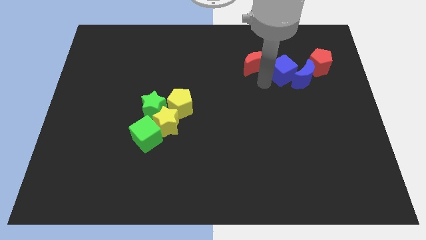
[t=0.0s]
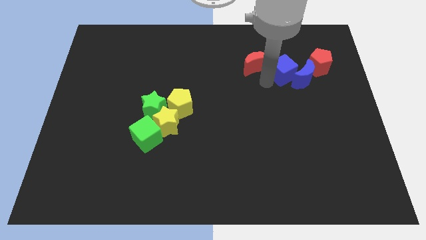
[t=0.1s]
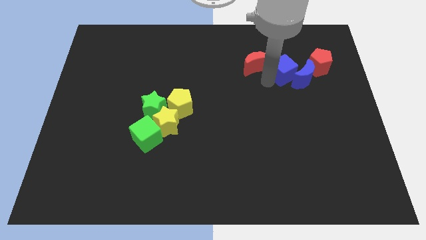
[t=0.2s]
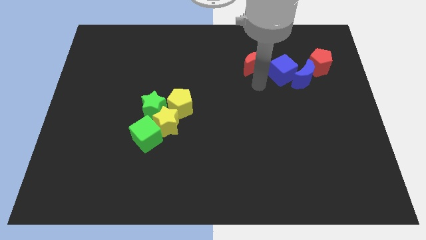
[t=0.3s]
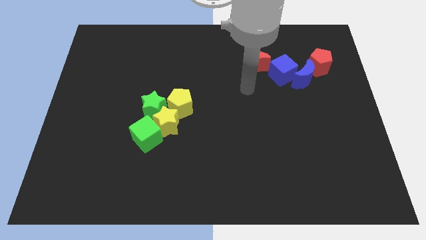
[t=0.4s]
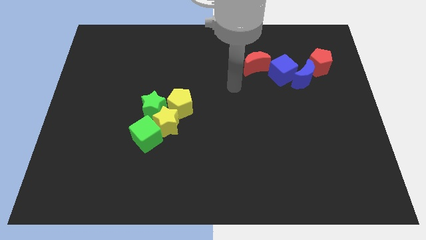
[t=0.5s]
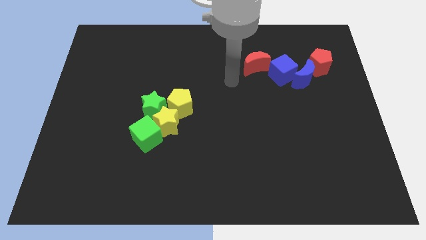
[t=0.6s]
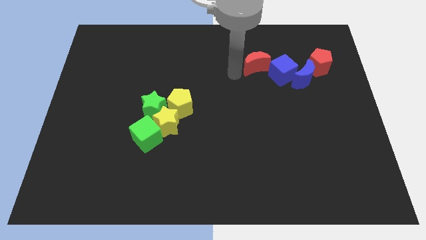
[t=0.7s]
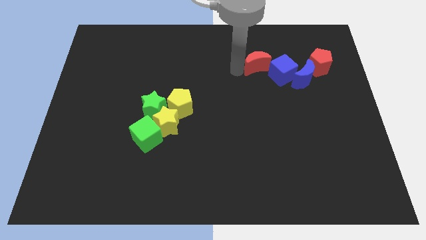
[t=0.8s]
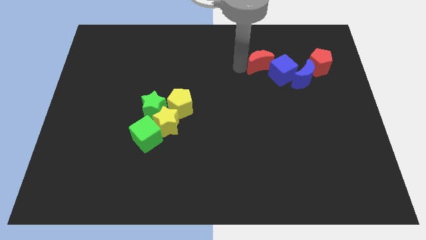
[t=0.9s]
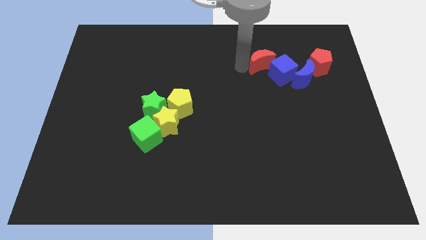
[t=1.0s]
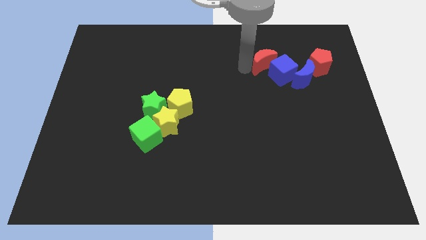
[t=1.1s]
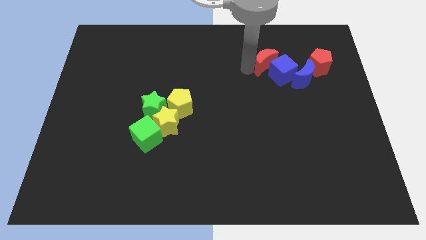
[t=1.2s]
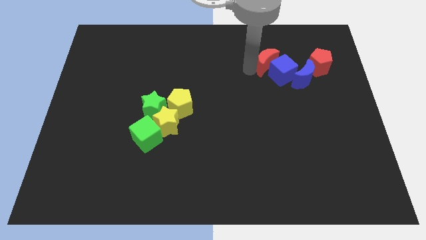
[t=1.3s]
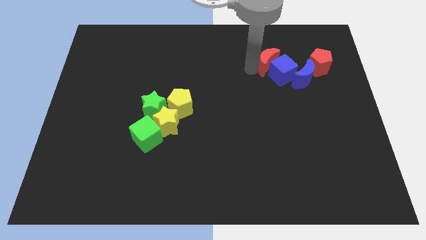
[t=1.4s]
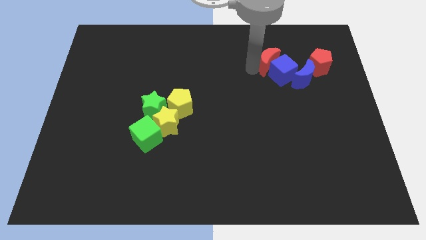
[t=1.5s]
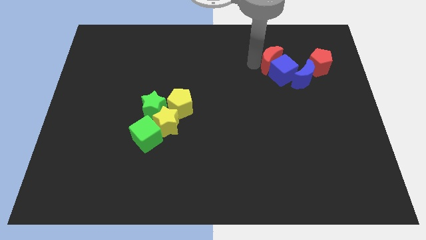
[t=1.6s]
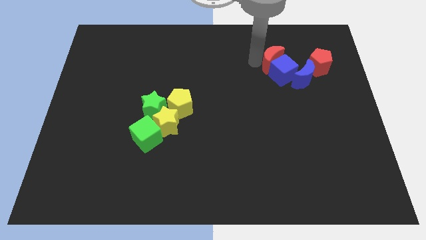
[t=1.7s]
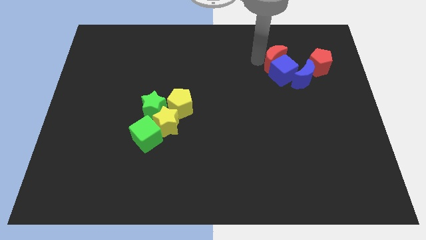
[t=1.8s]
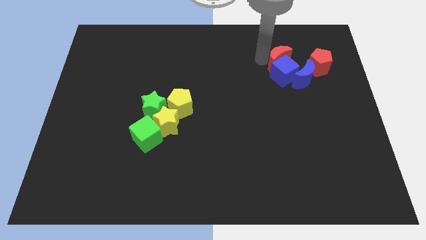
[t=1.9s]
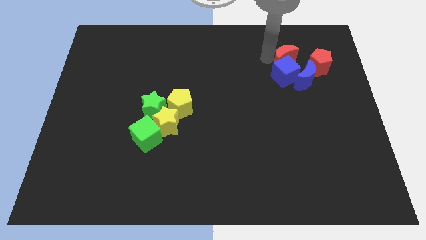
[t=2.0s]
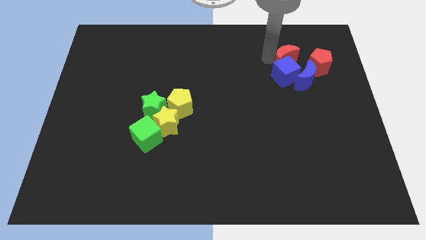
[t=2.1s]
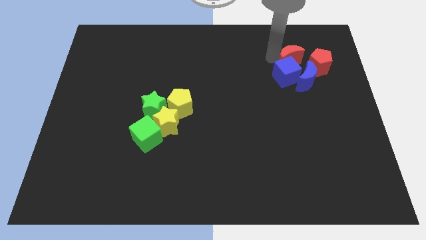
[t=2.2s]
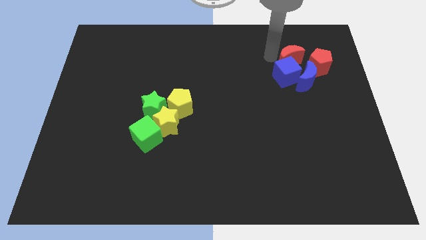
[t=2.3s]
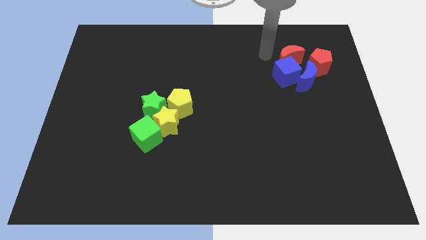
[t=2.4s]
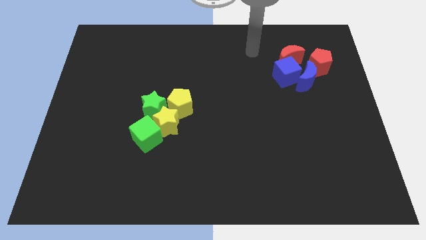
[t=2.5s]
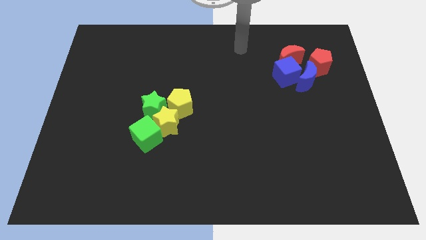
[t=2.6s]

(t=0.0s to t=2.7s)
move red crescent to the left side of the red pentagon

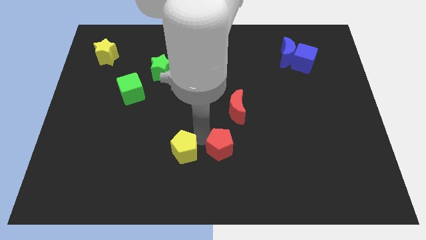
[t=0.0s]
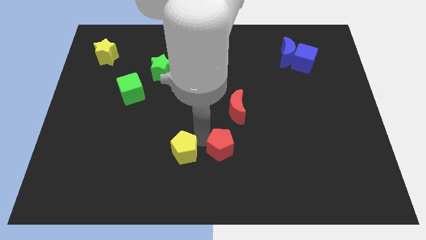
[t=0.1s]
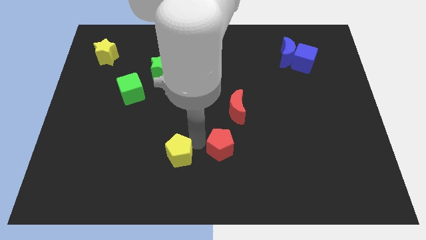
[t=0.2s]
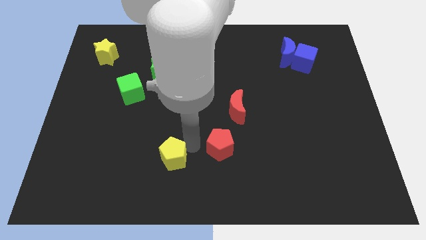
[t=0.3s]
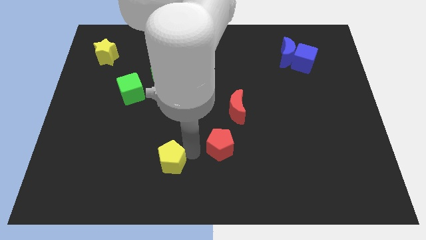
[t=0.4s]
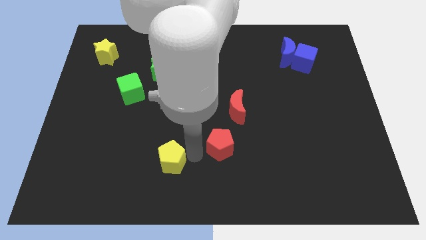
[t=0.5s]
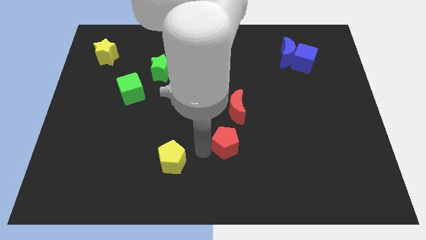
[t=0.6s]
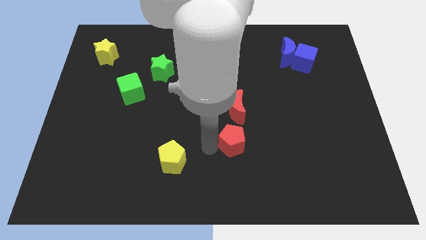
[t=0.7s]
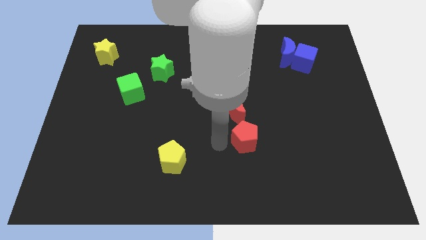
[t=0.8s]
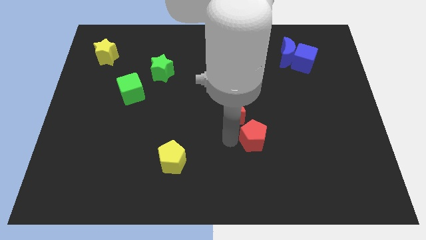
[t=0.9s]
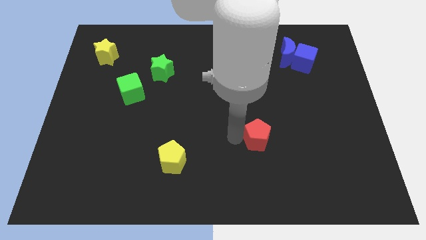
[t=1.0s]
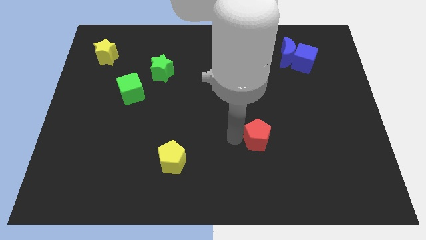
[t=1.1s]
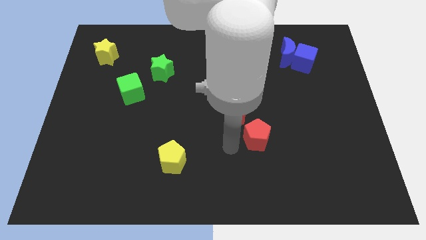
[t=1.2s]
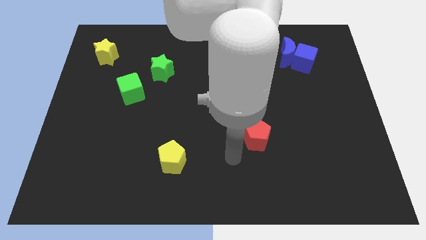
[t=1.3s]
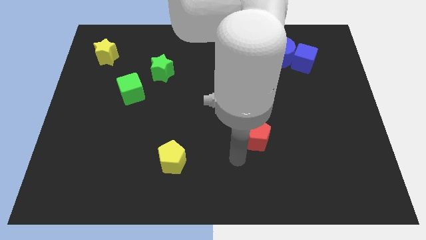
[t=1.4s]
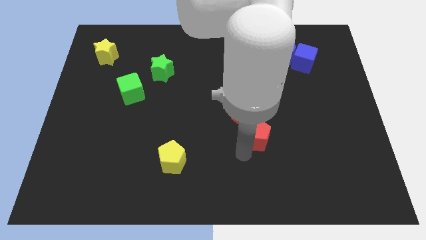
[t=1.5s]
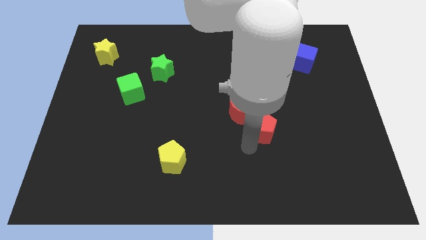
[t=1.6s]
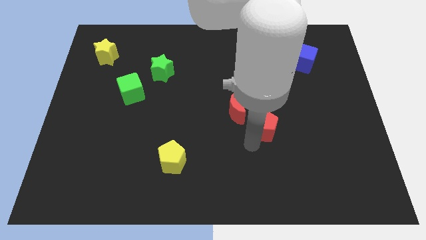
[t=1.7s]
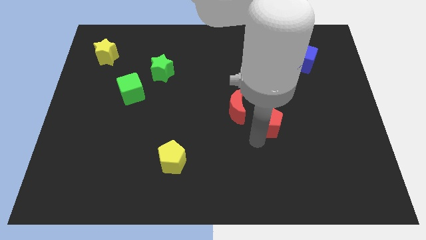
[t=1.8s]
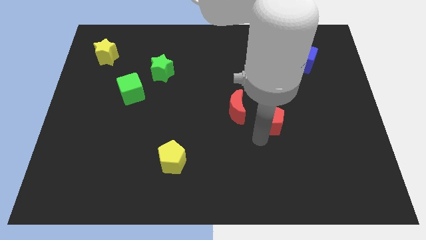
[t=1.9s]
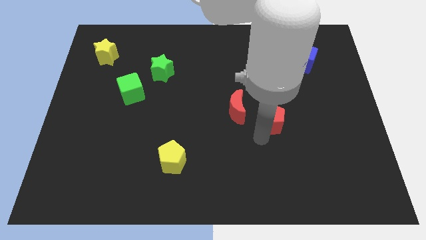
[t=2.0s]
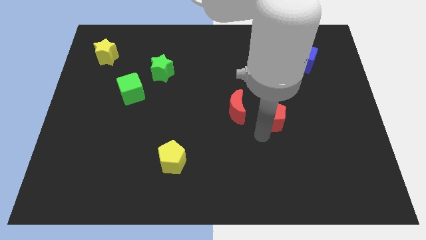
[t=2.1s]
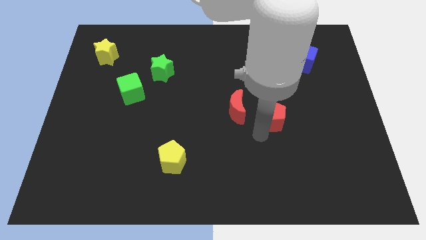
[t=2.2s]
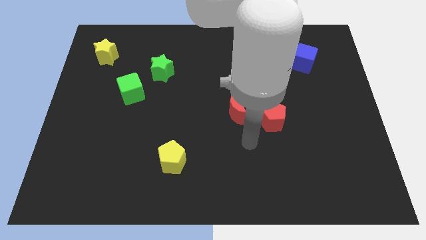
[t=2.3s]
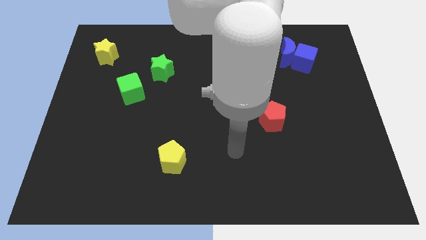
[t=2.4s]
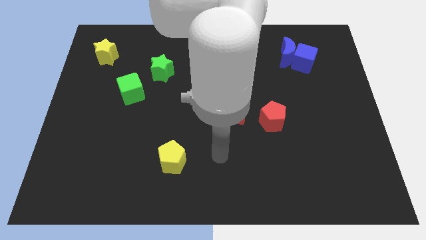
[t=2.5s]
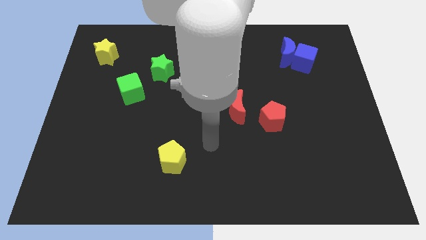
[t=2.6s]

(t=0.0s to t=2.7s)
place the red pentagon below the blue moon

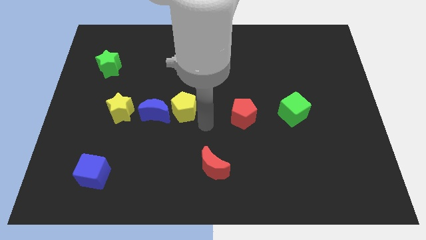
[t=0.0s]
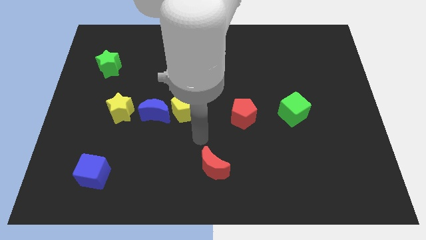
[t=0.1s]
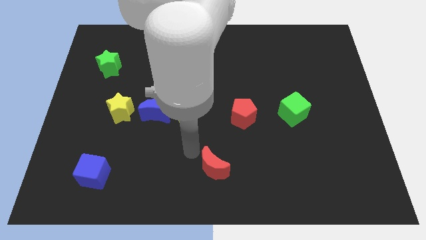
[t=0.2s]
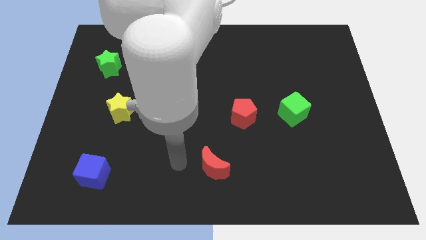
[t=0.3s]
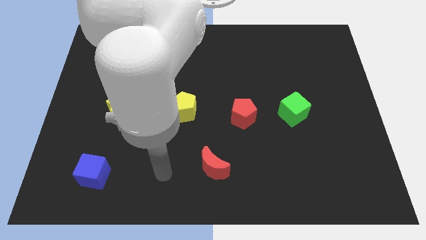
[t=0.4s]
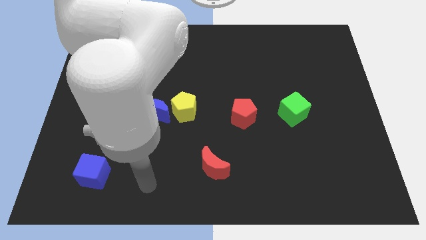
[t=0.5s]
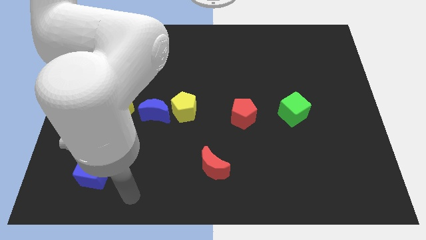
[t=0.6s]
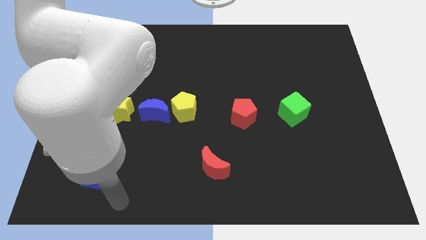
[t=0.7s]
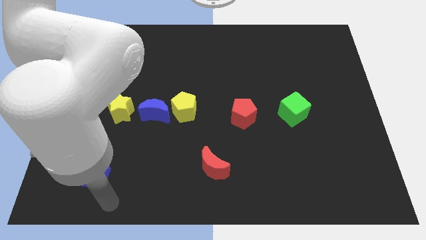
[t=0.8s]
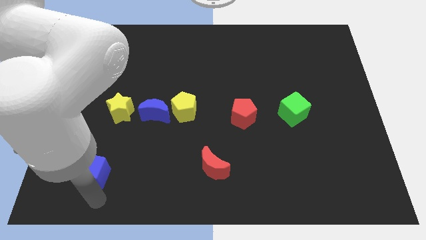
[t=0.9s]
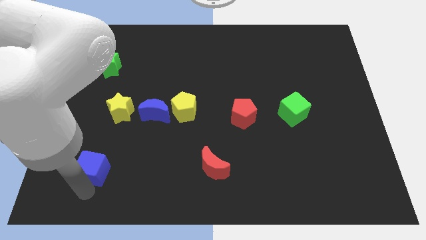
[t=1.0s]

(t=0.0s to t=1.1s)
move your arm to the bottom of the blue cube

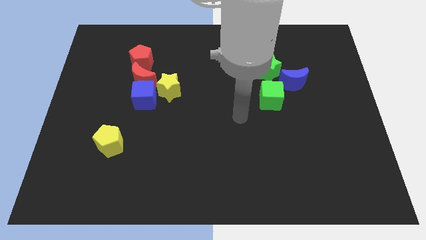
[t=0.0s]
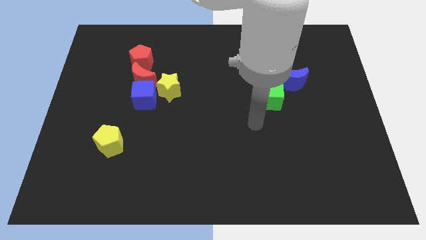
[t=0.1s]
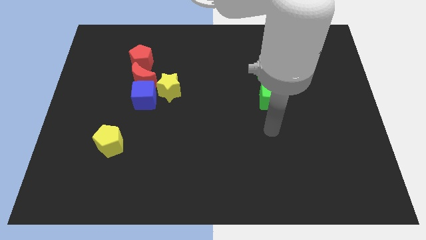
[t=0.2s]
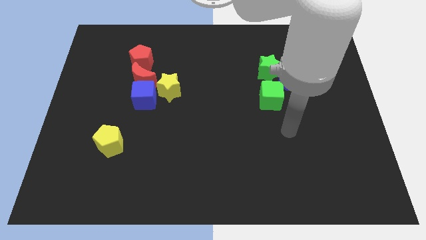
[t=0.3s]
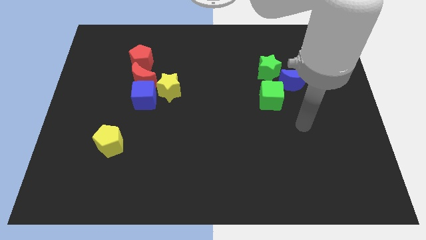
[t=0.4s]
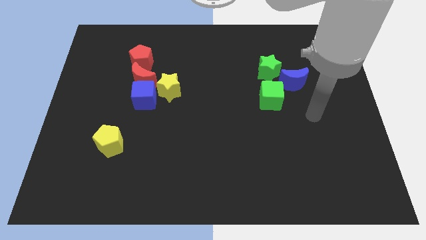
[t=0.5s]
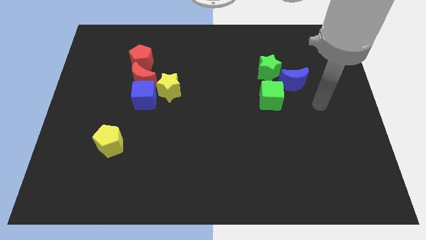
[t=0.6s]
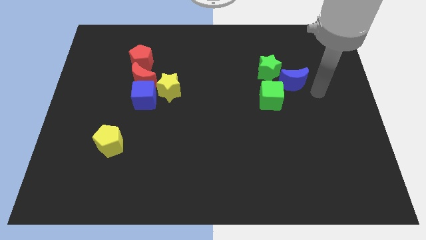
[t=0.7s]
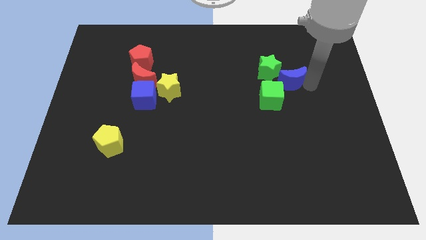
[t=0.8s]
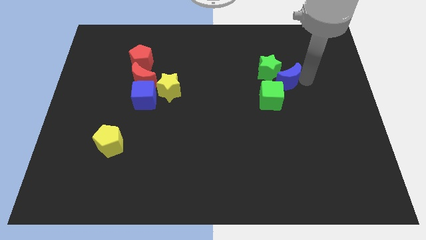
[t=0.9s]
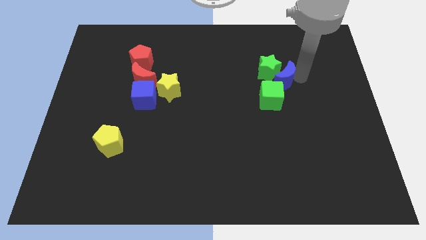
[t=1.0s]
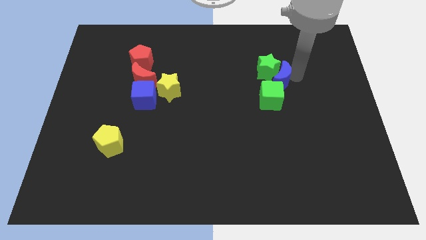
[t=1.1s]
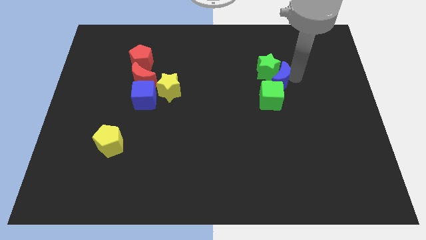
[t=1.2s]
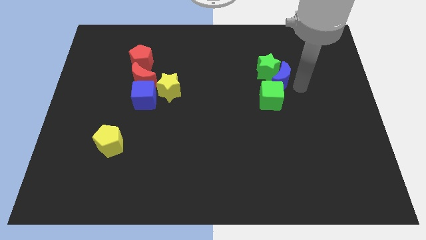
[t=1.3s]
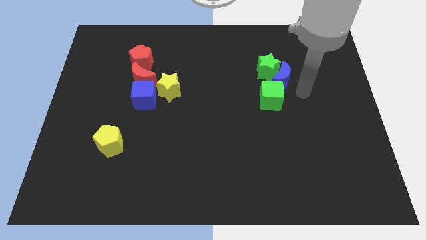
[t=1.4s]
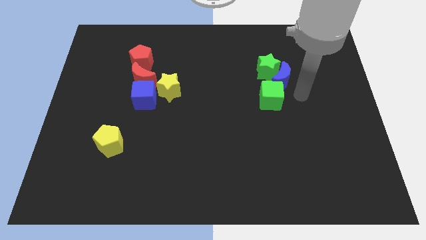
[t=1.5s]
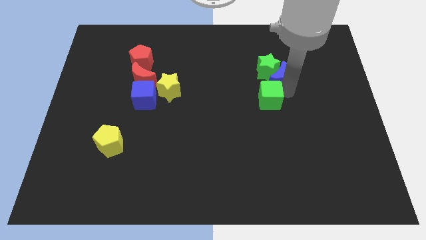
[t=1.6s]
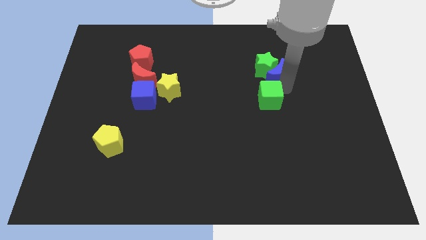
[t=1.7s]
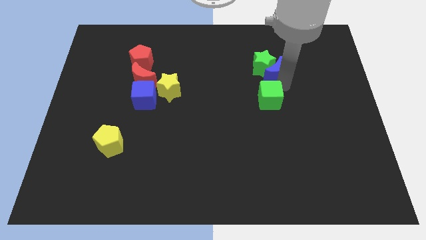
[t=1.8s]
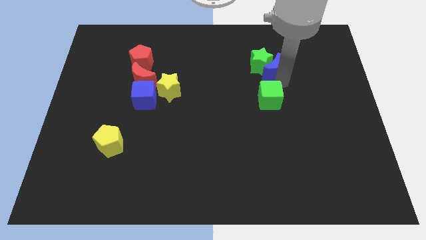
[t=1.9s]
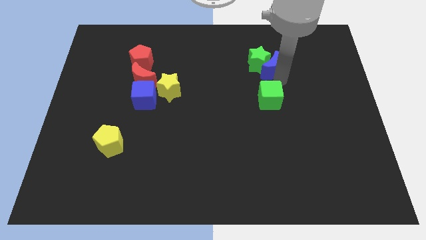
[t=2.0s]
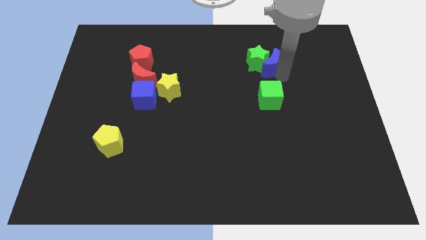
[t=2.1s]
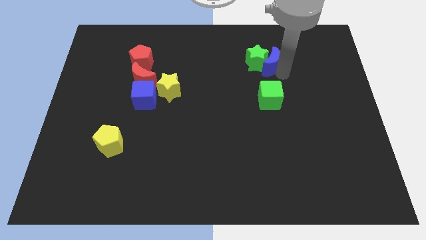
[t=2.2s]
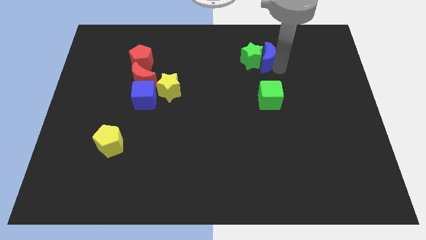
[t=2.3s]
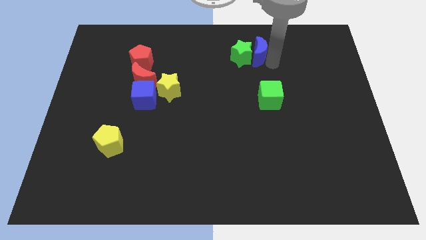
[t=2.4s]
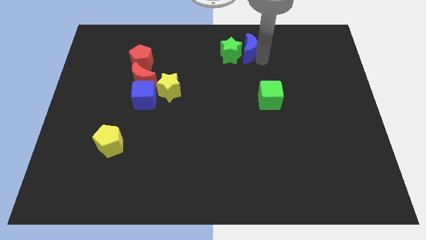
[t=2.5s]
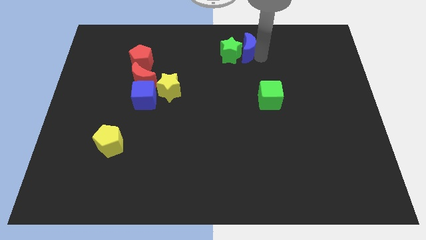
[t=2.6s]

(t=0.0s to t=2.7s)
push the green star with a blue moon to the top middle of the board
